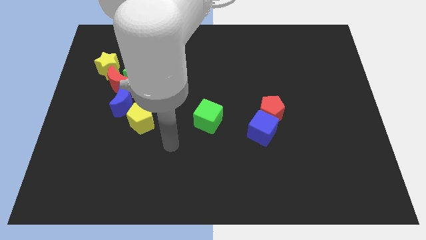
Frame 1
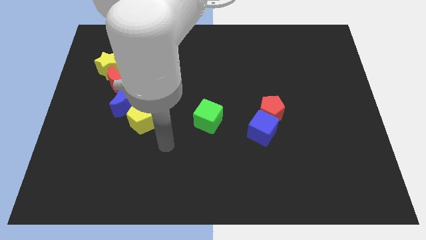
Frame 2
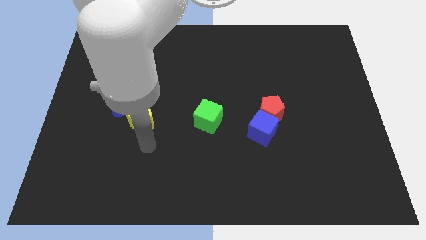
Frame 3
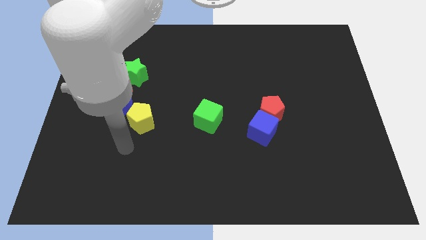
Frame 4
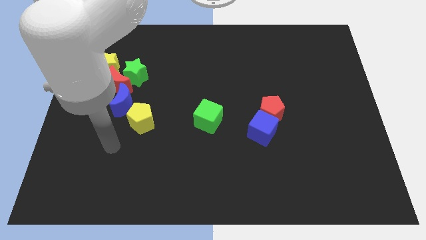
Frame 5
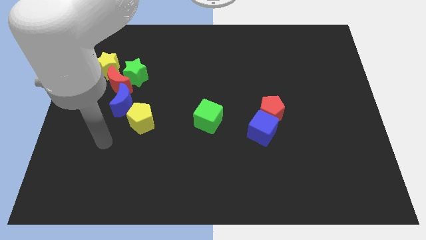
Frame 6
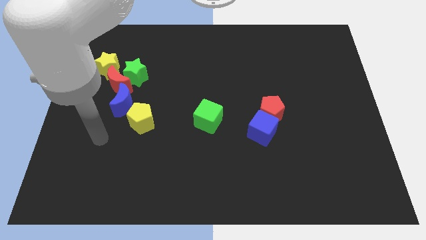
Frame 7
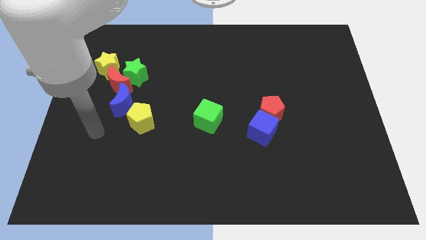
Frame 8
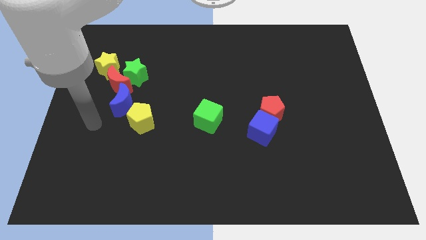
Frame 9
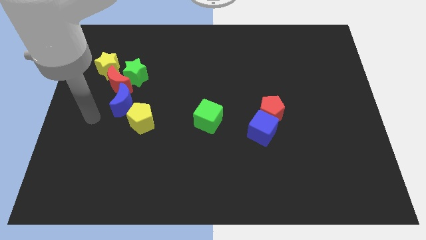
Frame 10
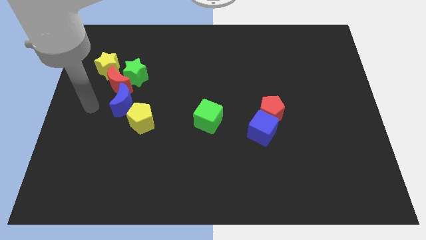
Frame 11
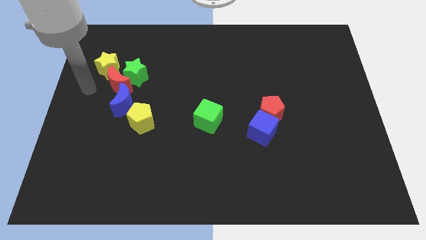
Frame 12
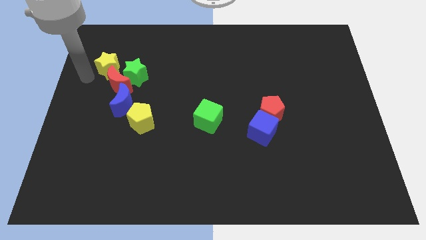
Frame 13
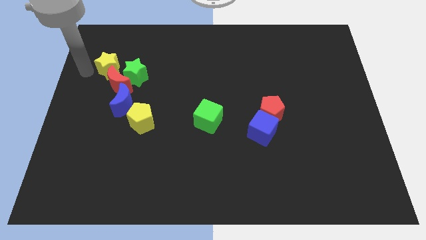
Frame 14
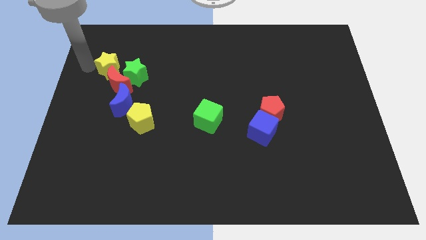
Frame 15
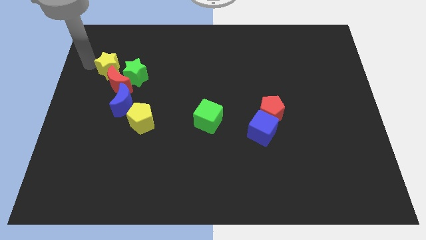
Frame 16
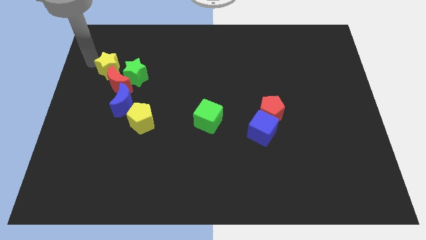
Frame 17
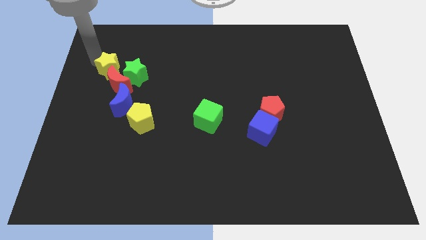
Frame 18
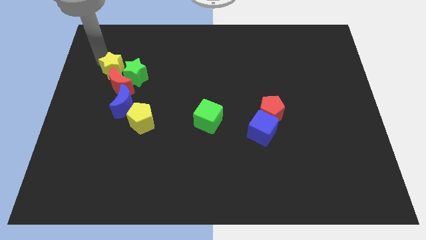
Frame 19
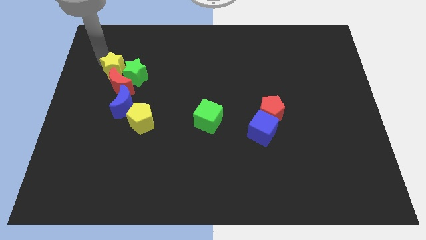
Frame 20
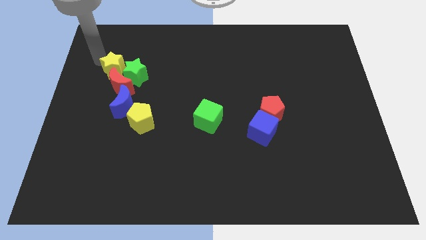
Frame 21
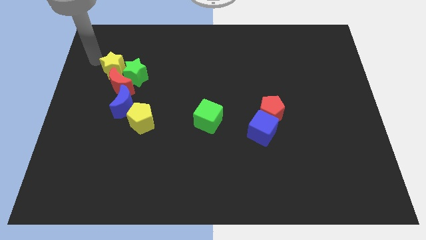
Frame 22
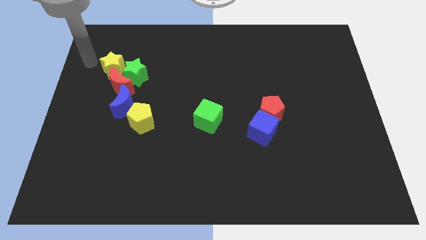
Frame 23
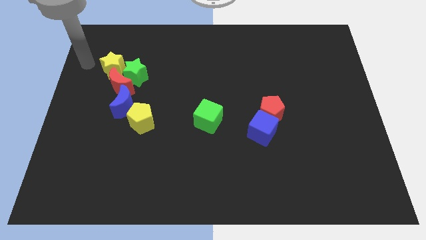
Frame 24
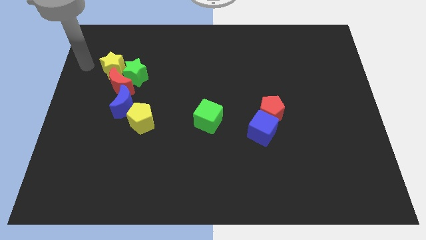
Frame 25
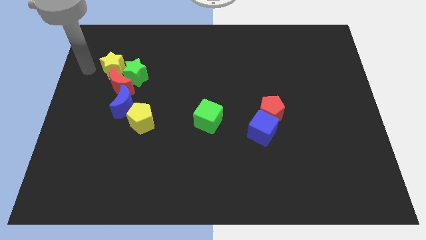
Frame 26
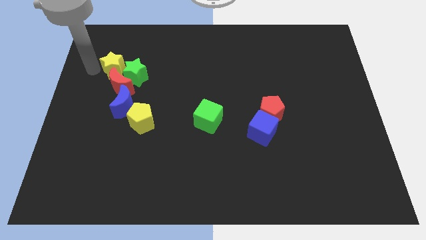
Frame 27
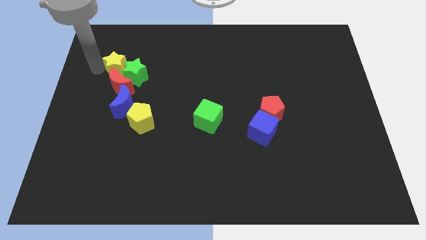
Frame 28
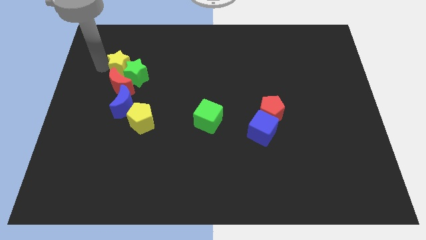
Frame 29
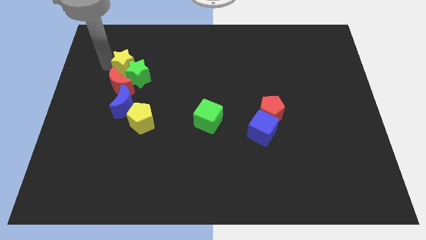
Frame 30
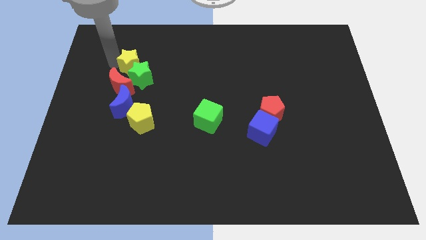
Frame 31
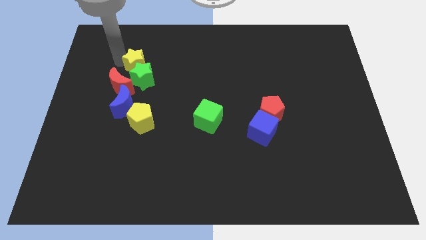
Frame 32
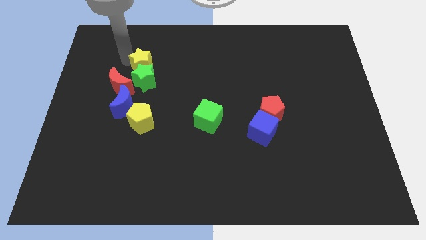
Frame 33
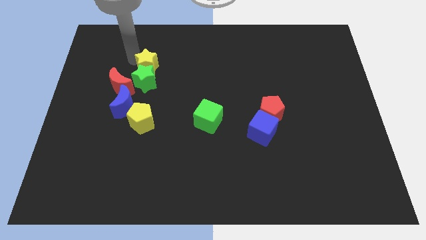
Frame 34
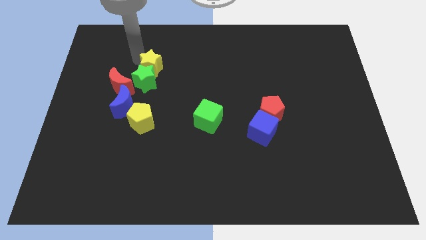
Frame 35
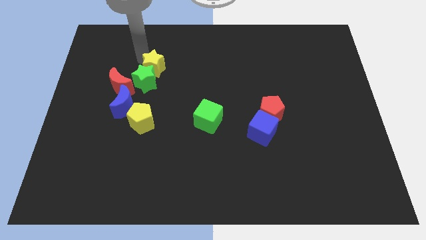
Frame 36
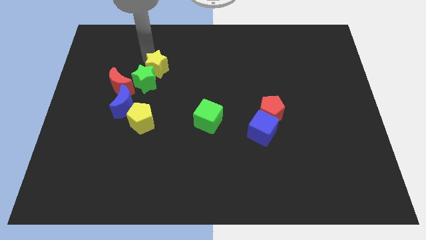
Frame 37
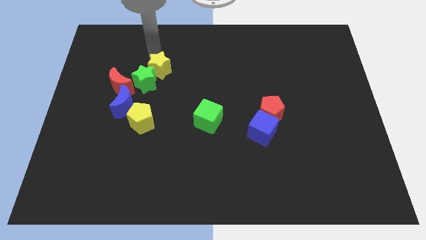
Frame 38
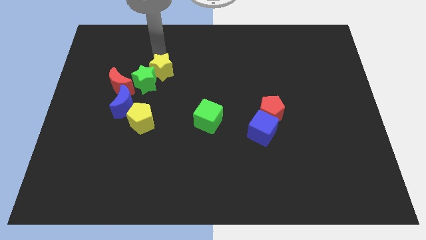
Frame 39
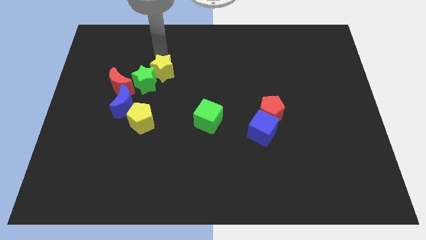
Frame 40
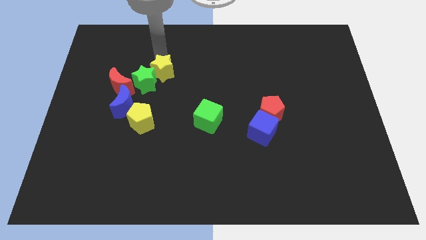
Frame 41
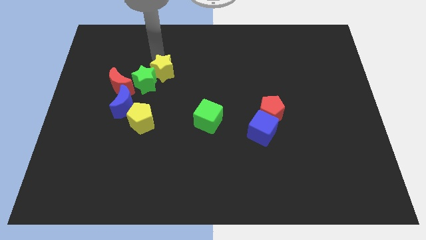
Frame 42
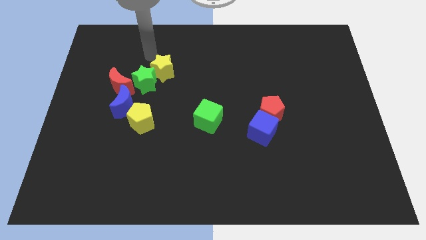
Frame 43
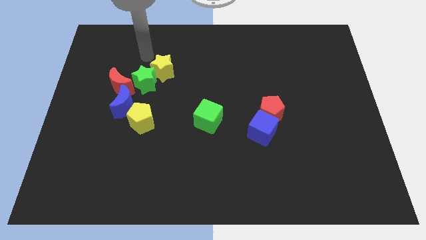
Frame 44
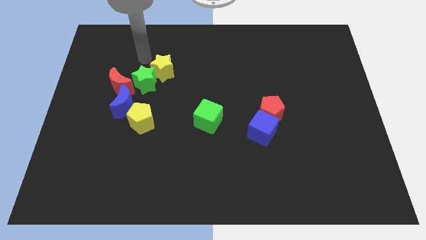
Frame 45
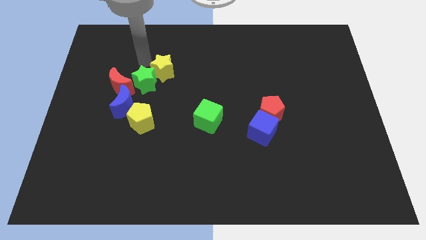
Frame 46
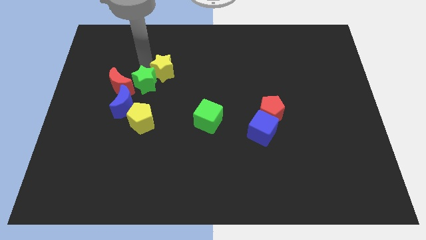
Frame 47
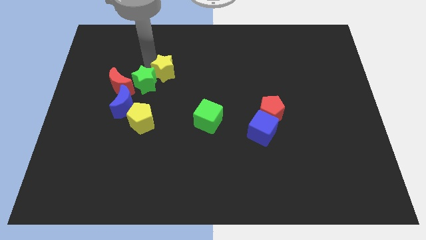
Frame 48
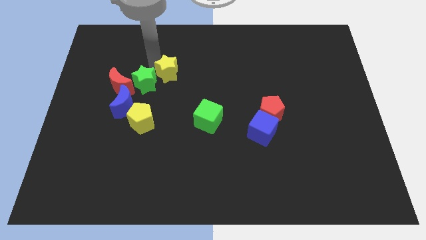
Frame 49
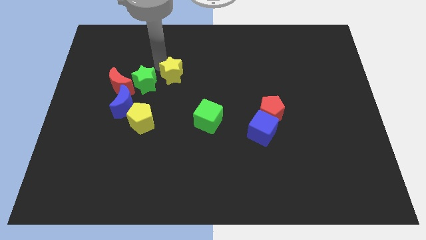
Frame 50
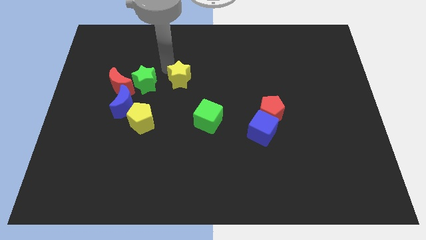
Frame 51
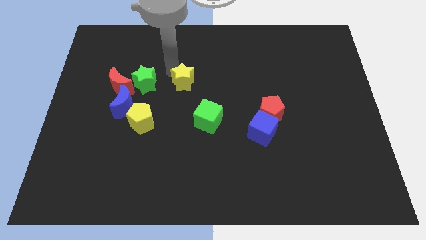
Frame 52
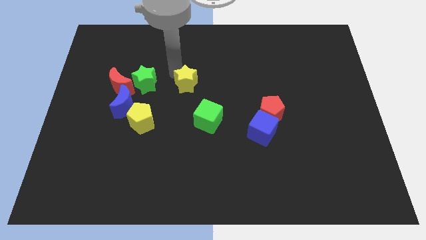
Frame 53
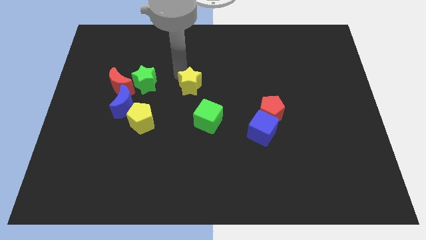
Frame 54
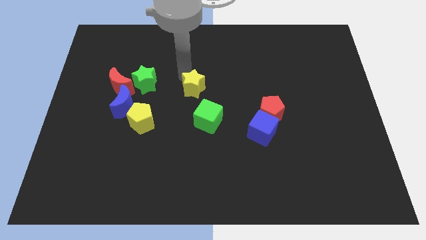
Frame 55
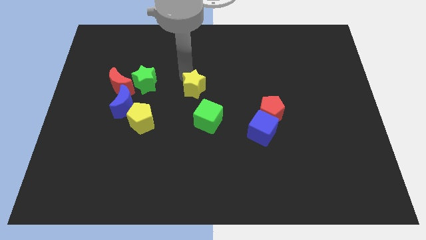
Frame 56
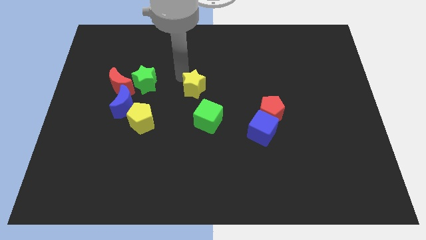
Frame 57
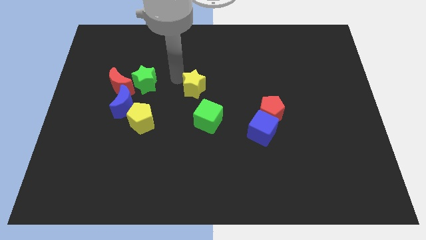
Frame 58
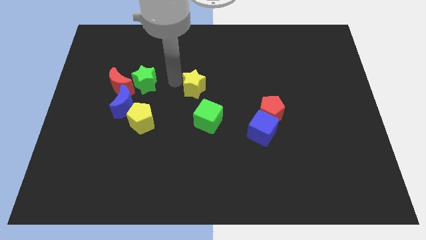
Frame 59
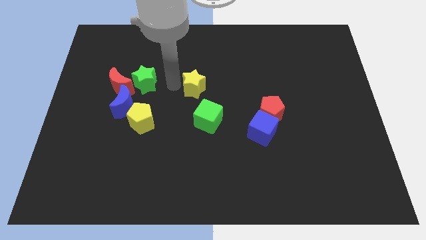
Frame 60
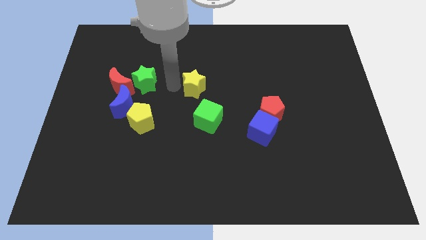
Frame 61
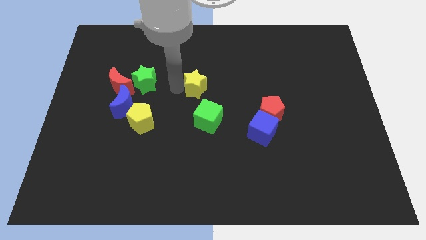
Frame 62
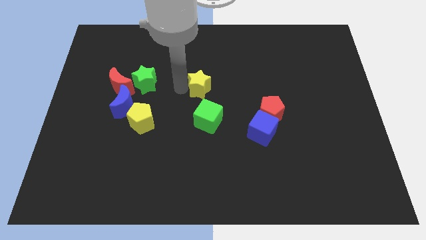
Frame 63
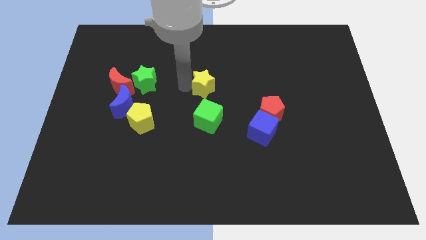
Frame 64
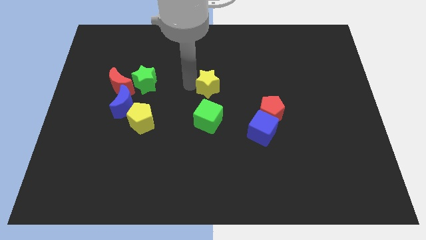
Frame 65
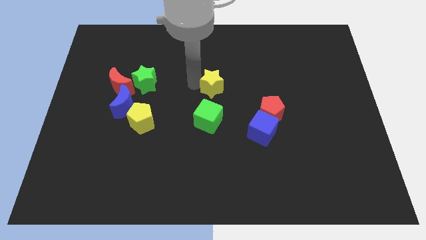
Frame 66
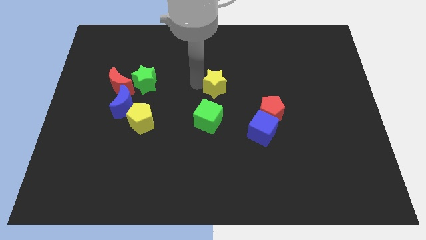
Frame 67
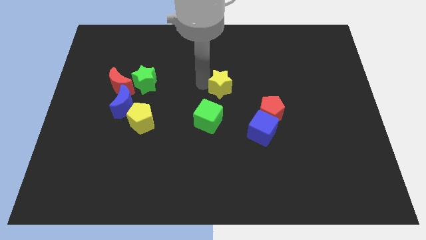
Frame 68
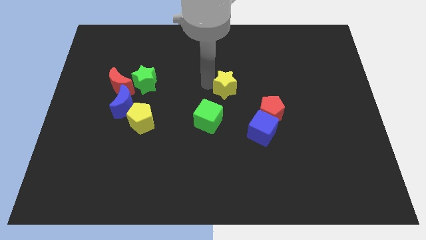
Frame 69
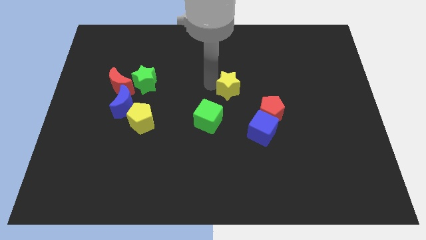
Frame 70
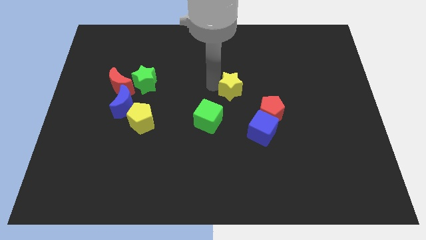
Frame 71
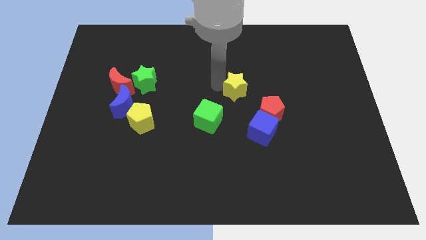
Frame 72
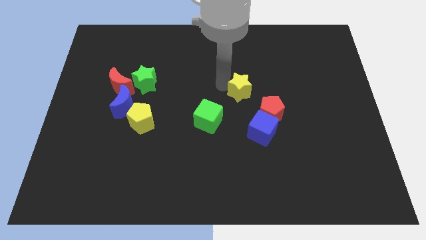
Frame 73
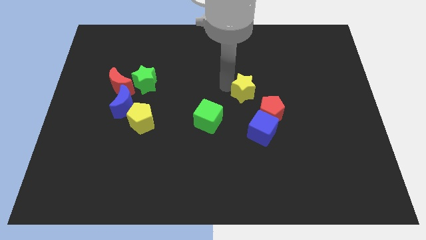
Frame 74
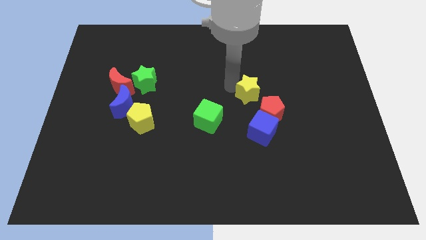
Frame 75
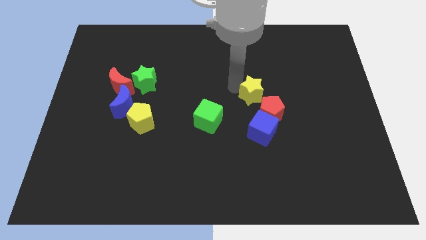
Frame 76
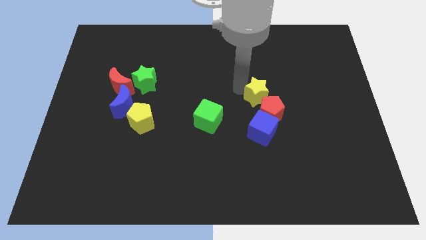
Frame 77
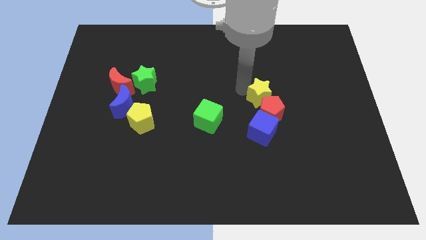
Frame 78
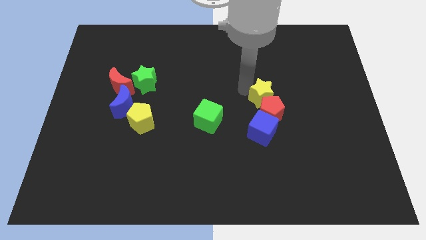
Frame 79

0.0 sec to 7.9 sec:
slide the yellow star to the red pentagon

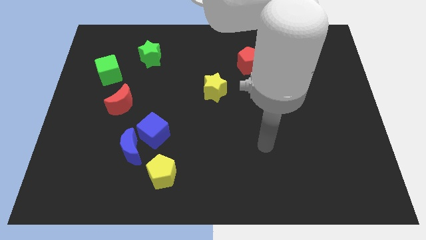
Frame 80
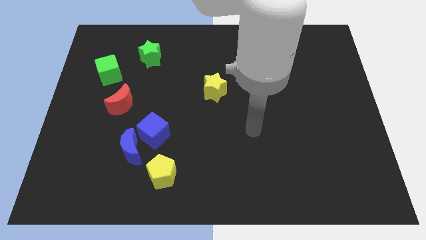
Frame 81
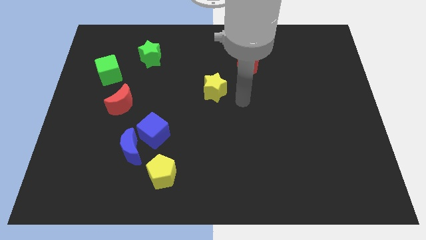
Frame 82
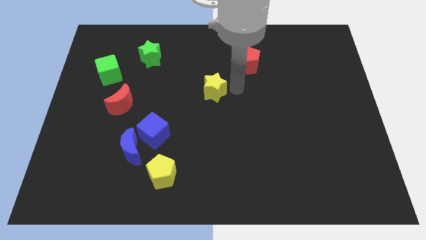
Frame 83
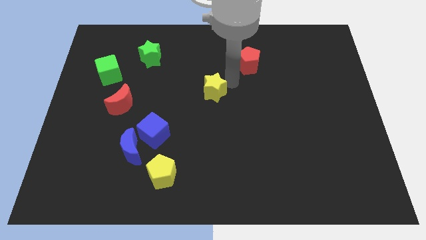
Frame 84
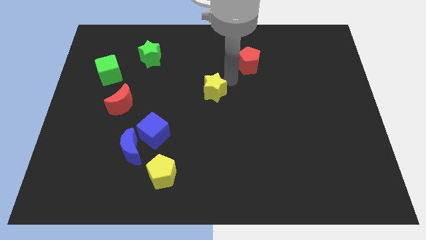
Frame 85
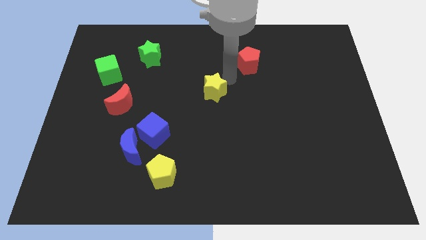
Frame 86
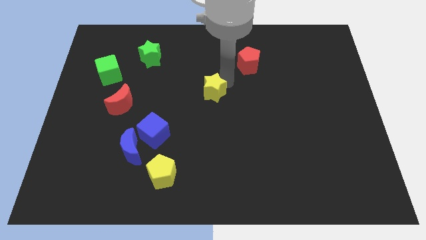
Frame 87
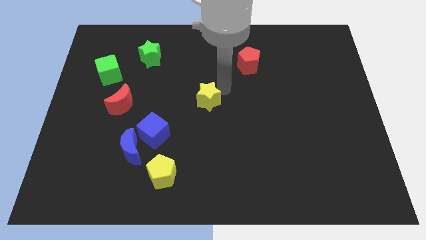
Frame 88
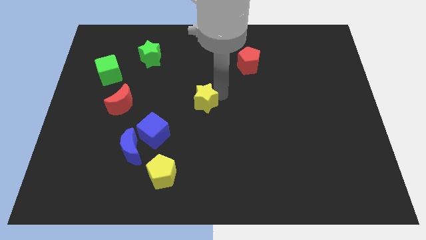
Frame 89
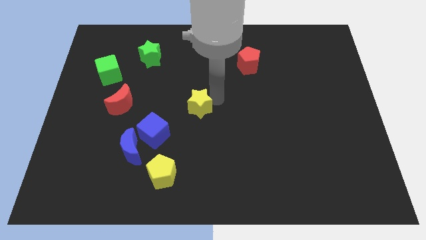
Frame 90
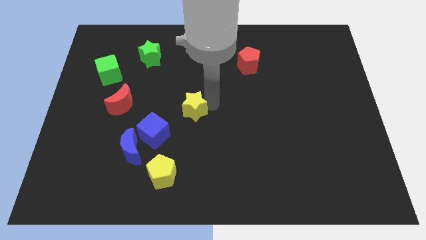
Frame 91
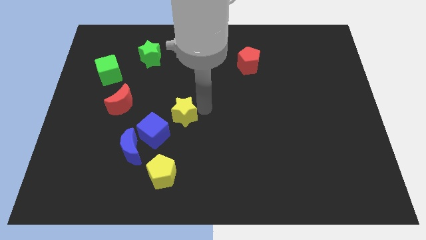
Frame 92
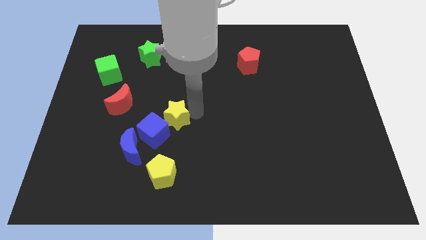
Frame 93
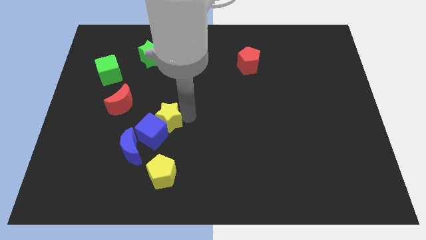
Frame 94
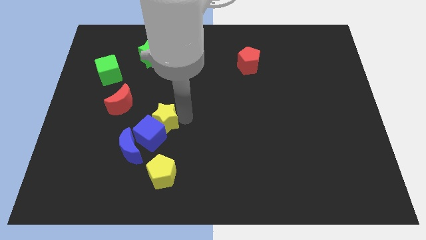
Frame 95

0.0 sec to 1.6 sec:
push the yellow star towards the blue cube
